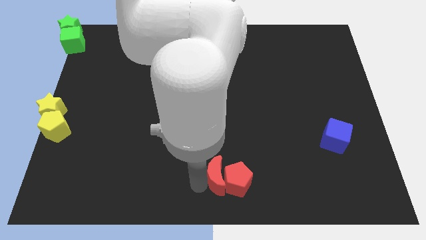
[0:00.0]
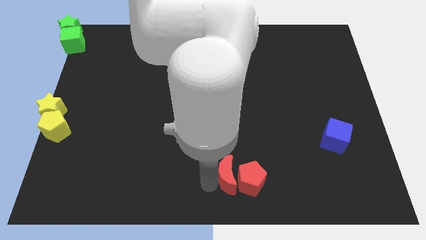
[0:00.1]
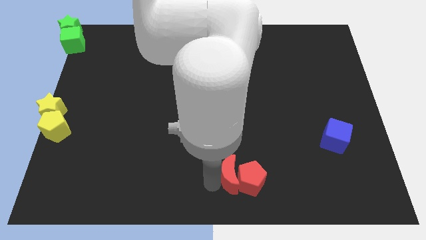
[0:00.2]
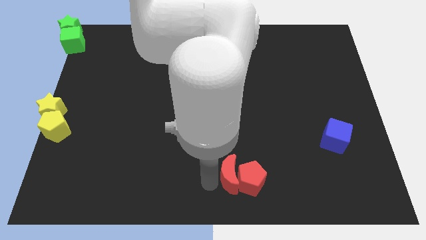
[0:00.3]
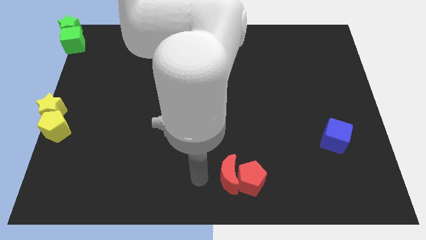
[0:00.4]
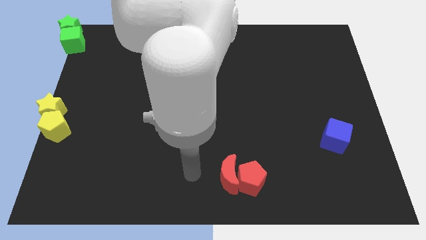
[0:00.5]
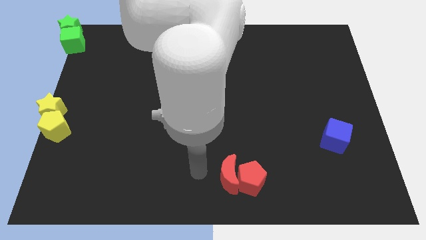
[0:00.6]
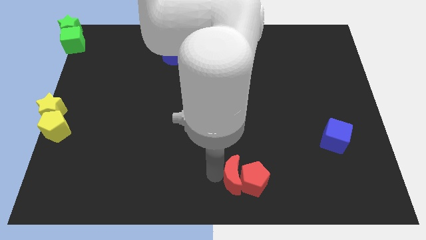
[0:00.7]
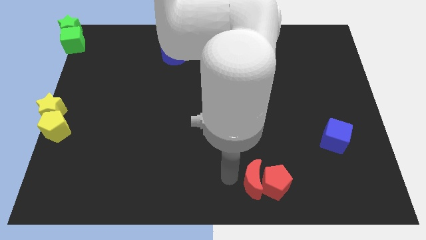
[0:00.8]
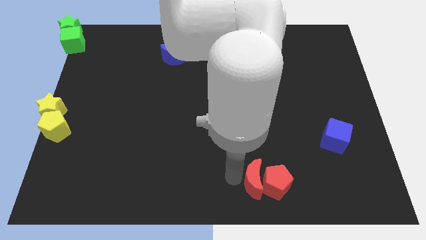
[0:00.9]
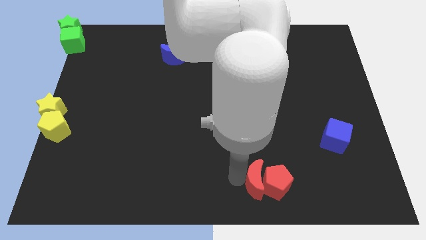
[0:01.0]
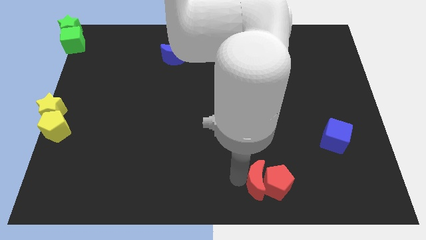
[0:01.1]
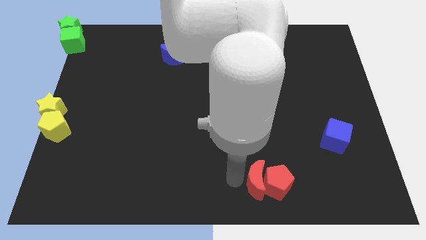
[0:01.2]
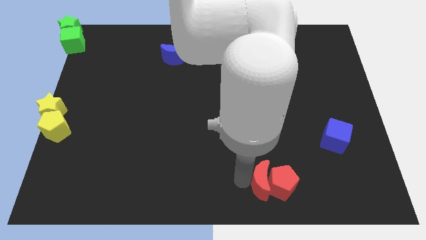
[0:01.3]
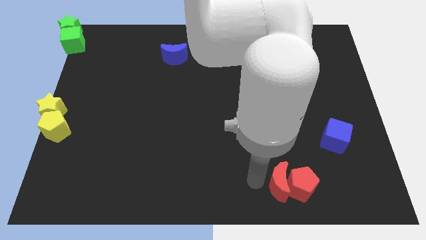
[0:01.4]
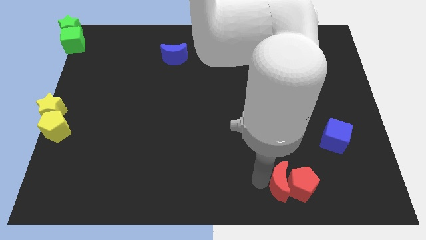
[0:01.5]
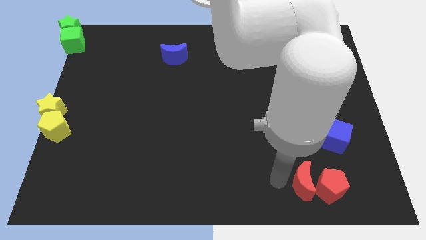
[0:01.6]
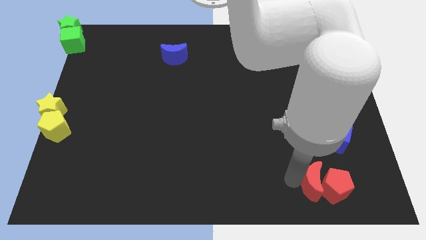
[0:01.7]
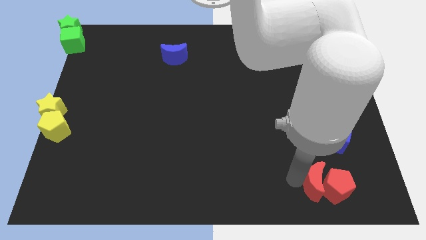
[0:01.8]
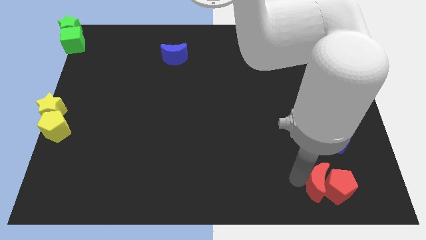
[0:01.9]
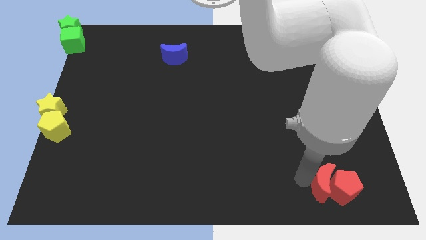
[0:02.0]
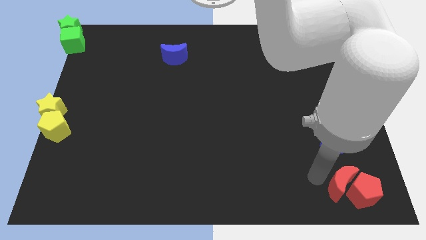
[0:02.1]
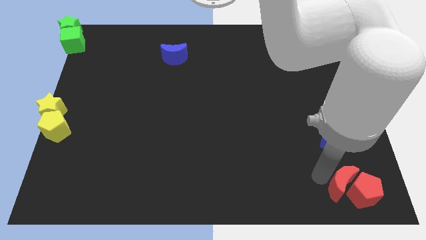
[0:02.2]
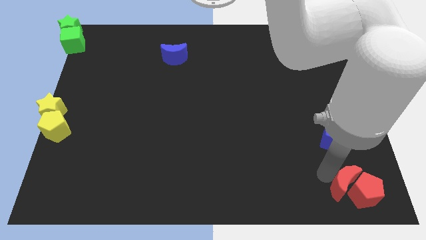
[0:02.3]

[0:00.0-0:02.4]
place red crescent below blue cube

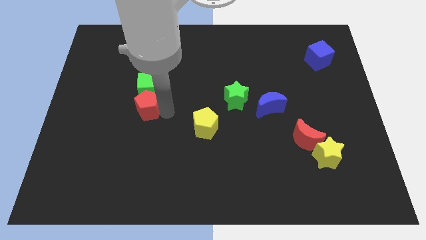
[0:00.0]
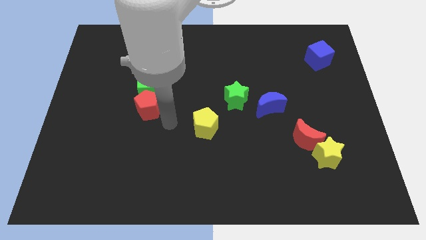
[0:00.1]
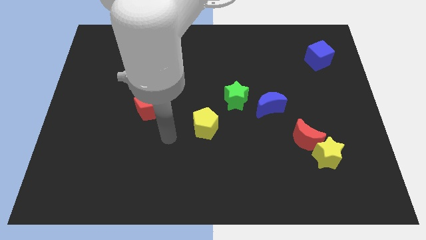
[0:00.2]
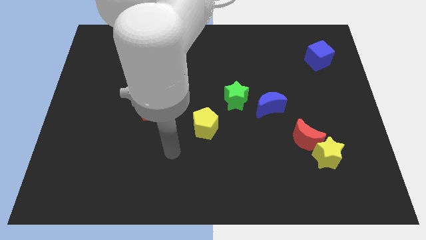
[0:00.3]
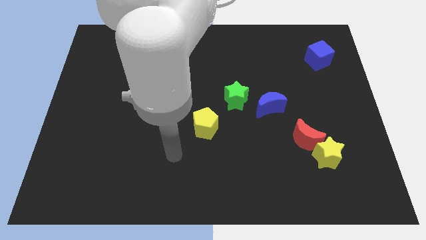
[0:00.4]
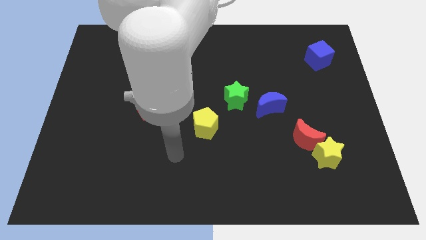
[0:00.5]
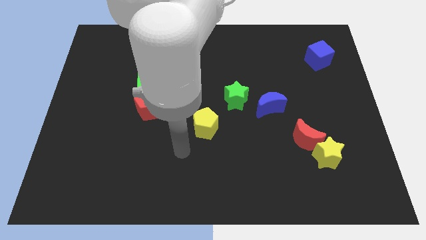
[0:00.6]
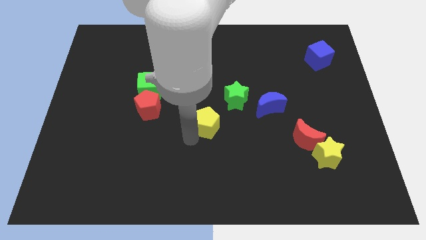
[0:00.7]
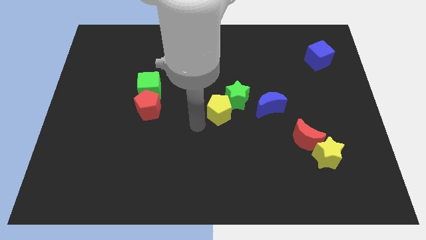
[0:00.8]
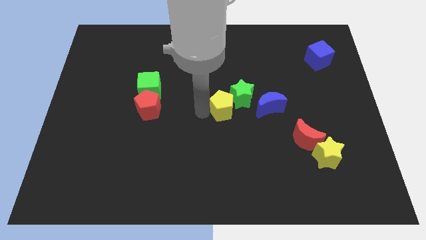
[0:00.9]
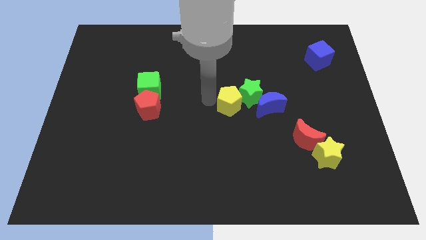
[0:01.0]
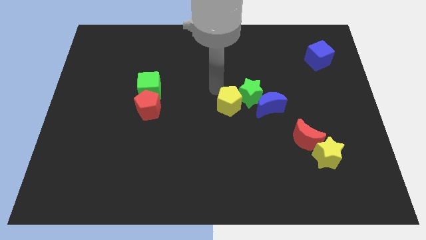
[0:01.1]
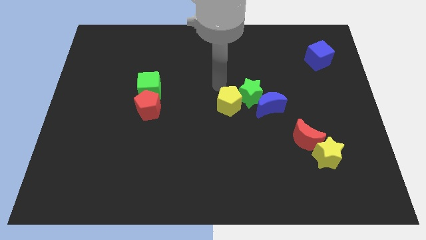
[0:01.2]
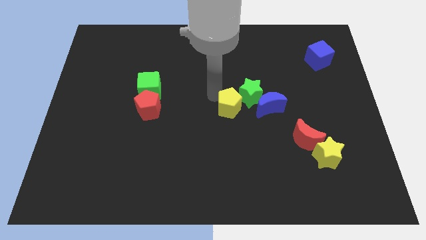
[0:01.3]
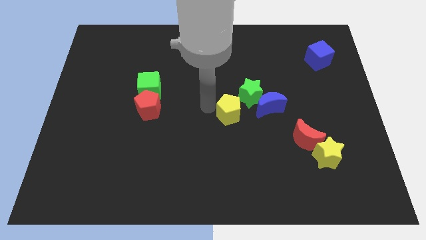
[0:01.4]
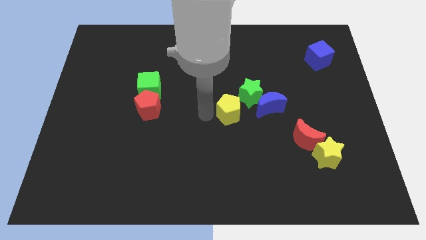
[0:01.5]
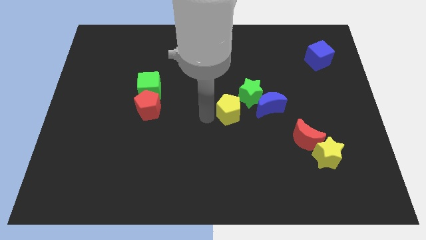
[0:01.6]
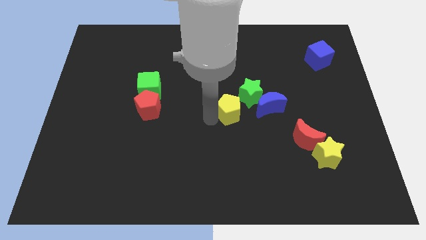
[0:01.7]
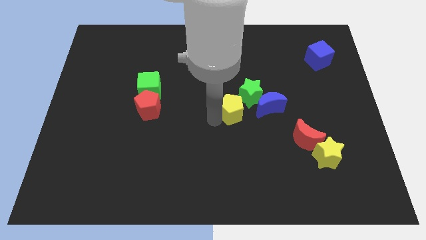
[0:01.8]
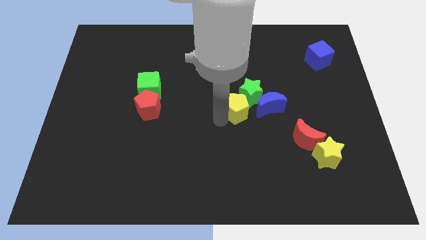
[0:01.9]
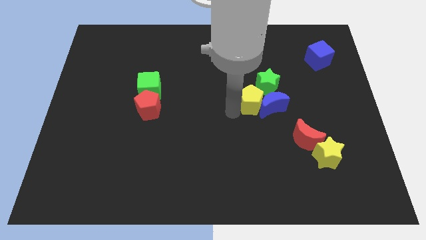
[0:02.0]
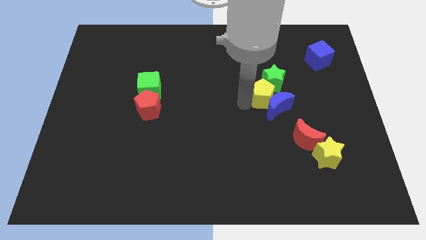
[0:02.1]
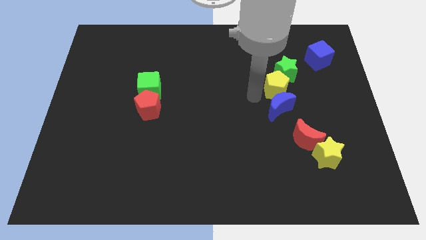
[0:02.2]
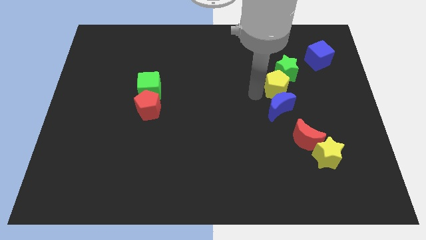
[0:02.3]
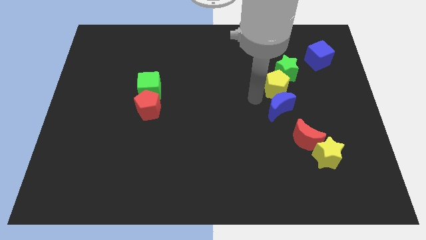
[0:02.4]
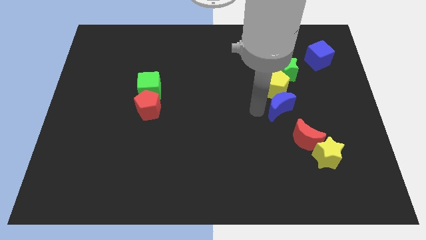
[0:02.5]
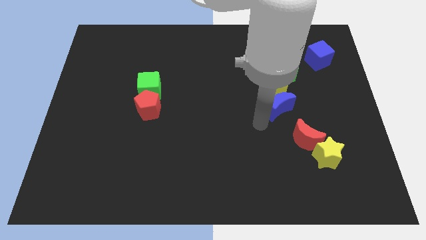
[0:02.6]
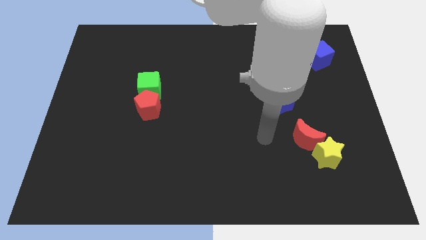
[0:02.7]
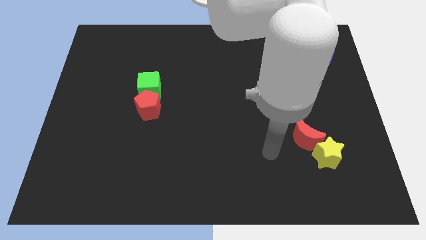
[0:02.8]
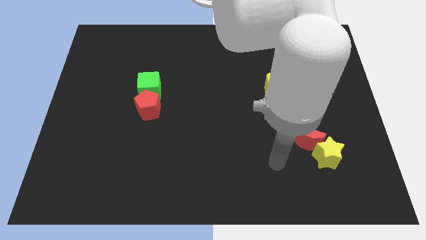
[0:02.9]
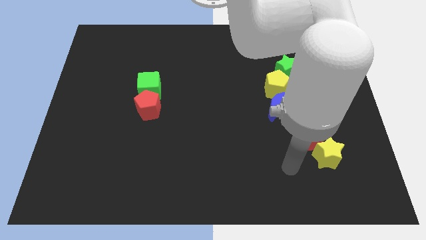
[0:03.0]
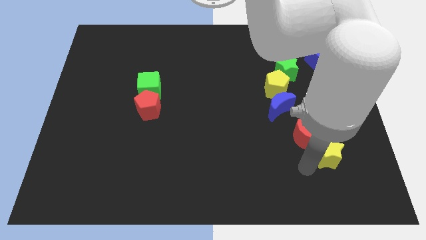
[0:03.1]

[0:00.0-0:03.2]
move the yellow pentagon and green star to the top side of the blue cube

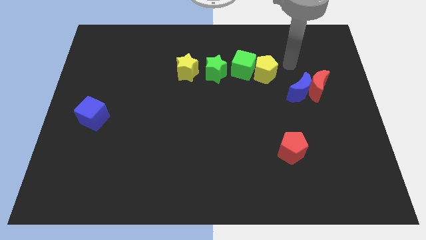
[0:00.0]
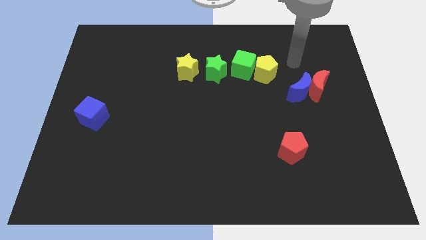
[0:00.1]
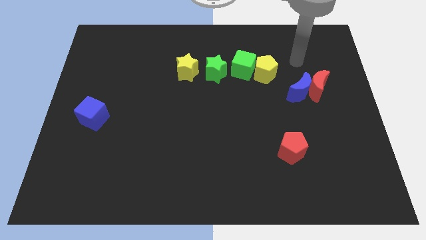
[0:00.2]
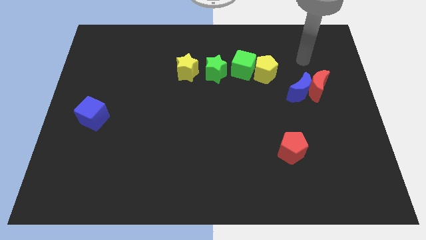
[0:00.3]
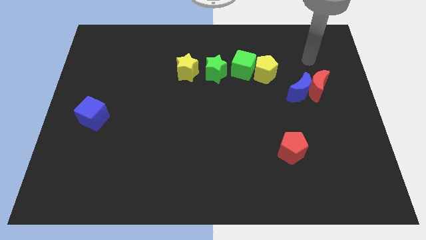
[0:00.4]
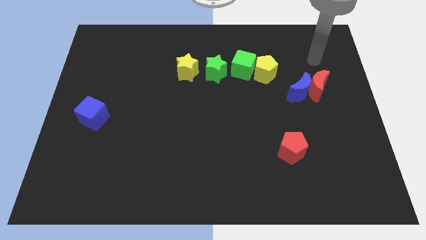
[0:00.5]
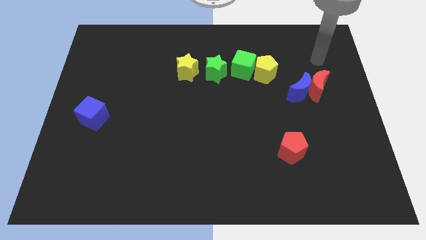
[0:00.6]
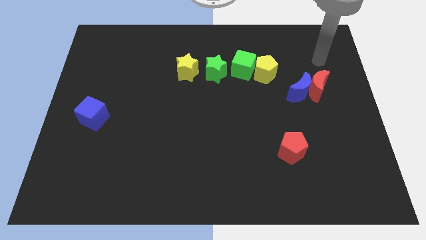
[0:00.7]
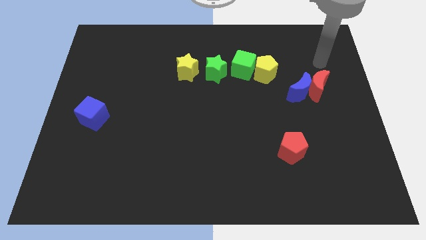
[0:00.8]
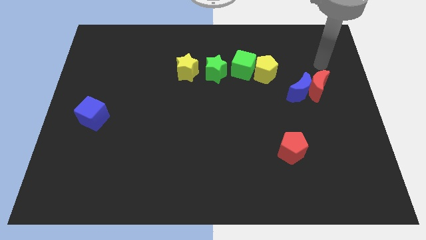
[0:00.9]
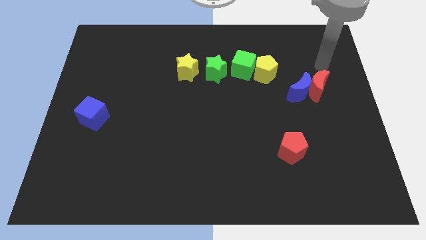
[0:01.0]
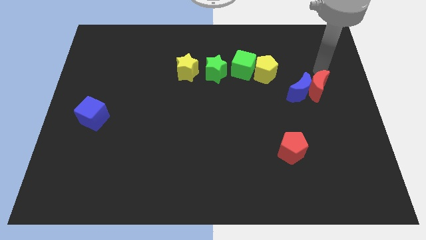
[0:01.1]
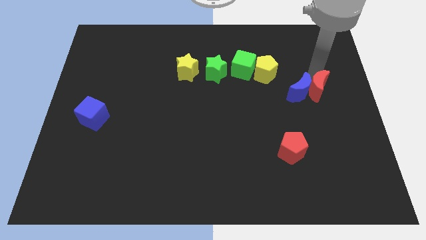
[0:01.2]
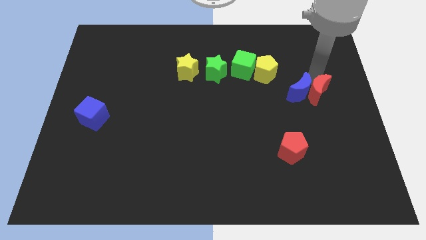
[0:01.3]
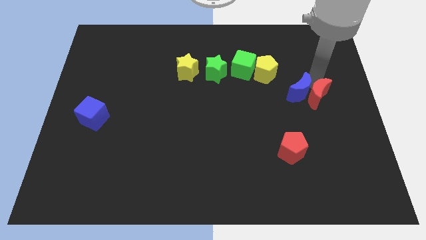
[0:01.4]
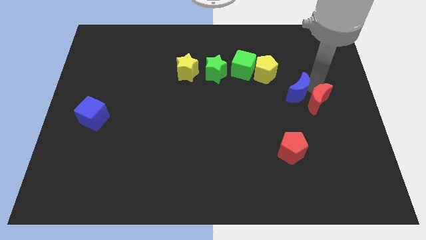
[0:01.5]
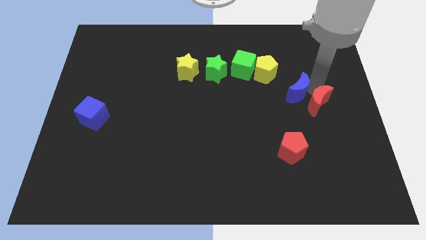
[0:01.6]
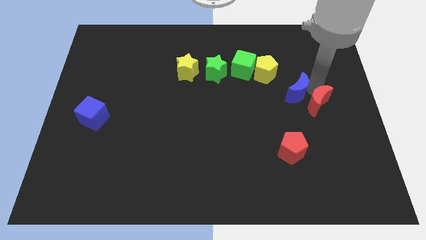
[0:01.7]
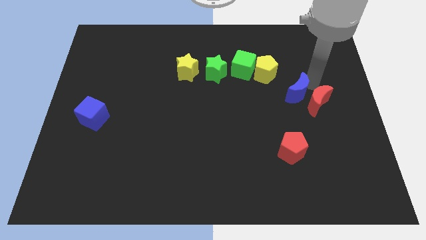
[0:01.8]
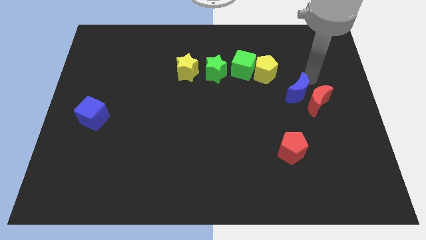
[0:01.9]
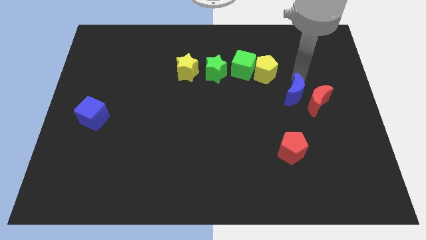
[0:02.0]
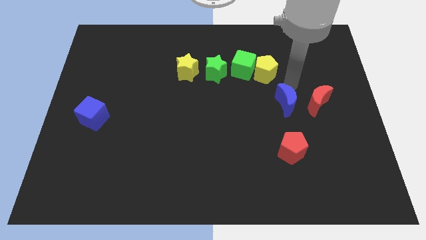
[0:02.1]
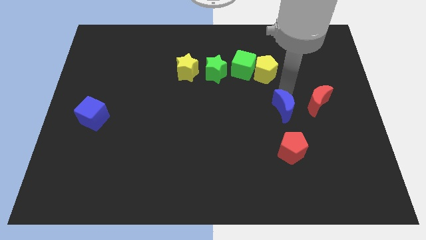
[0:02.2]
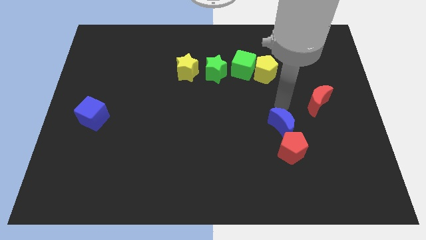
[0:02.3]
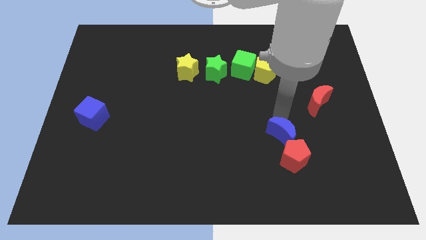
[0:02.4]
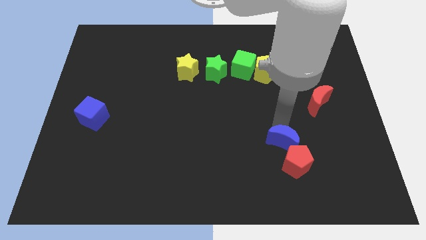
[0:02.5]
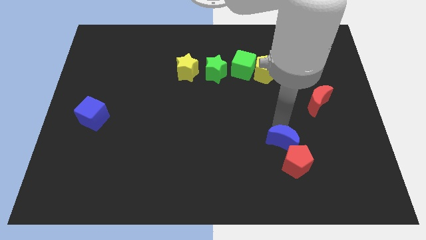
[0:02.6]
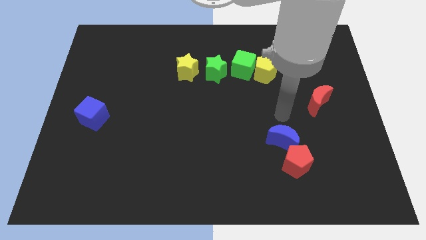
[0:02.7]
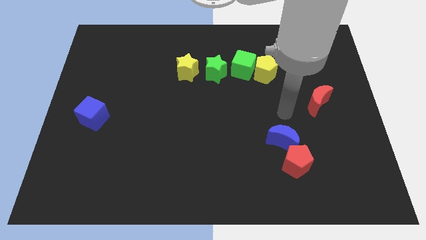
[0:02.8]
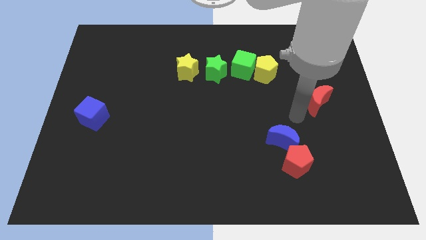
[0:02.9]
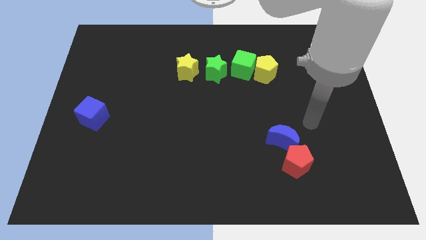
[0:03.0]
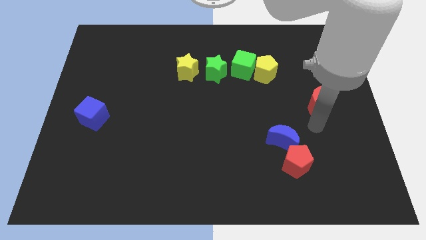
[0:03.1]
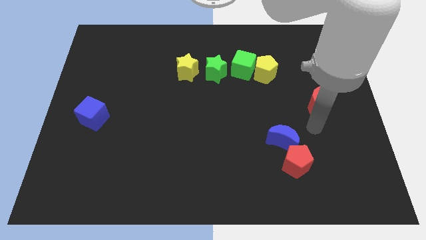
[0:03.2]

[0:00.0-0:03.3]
push the blue crescent into the top side of the red pentagon

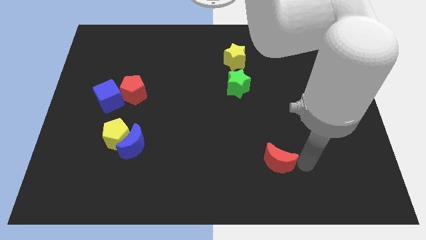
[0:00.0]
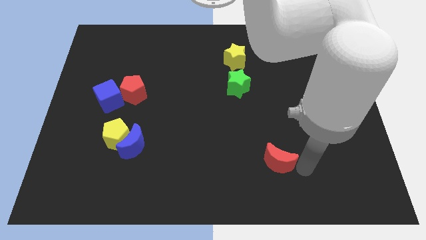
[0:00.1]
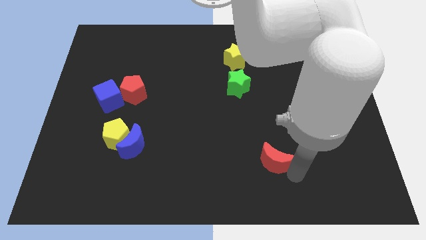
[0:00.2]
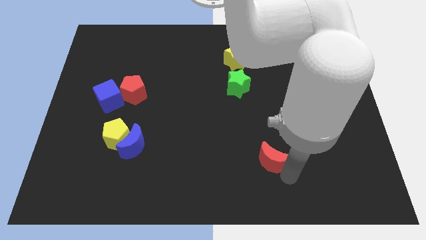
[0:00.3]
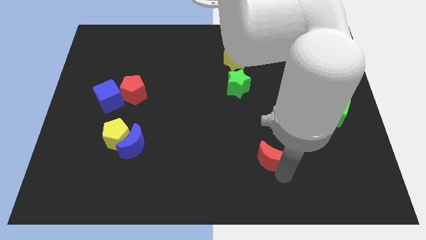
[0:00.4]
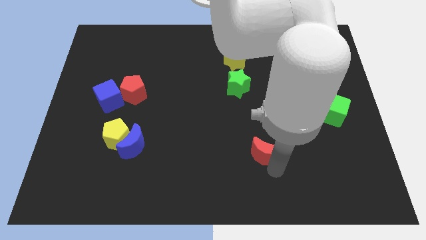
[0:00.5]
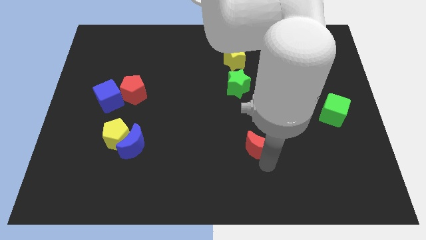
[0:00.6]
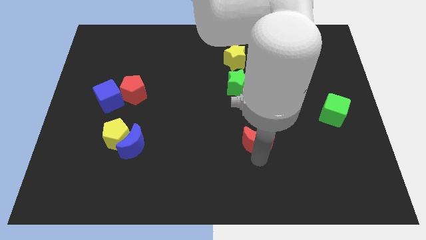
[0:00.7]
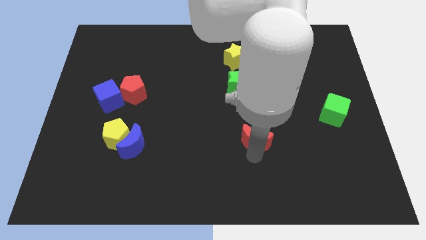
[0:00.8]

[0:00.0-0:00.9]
move the red crescent towards the green star
